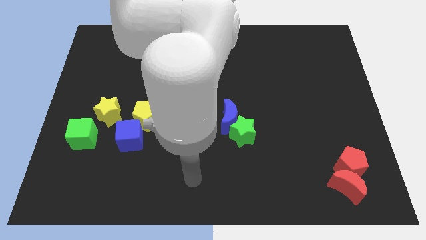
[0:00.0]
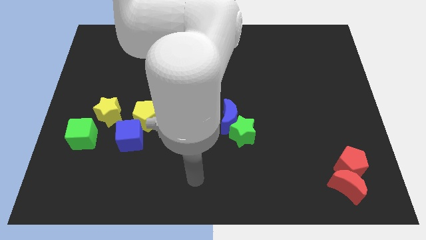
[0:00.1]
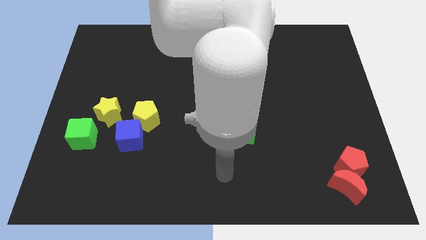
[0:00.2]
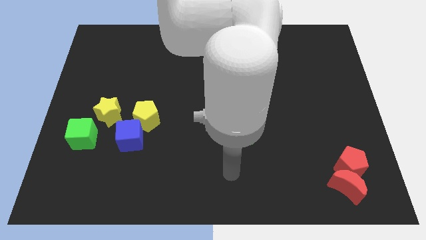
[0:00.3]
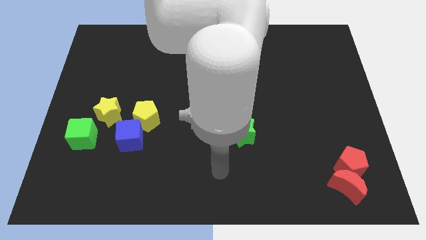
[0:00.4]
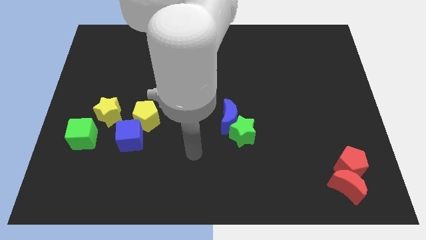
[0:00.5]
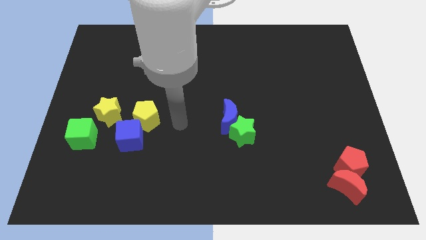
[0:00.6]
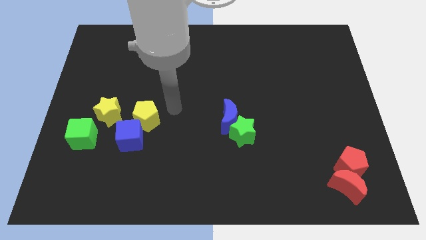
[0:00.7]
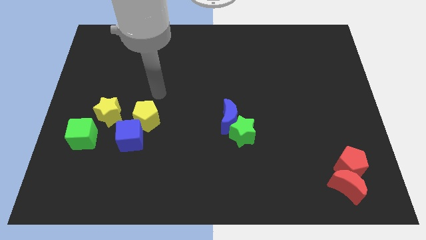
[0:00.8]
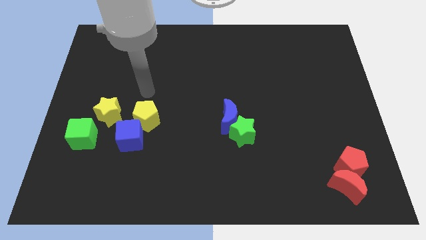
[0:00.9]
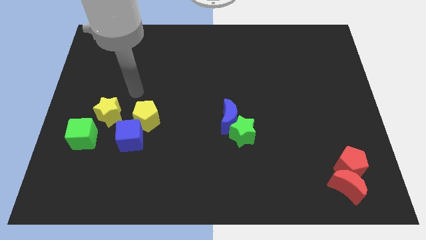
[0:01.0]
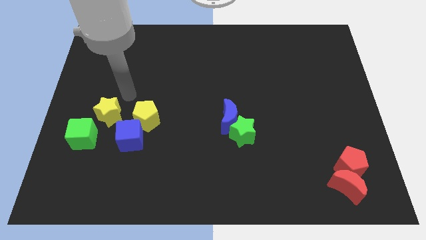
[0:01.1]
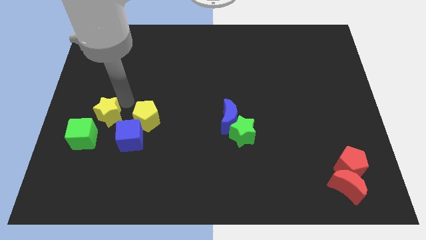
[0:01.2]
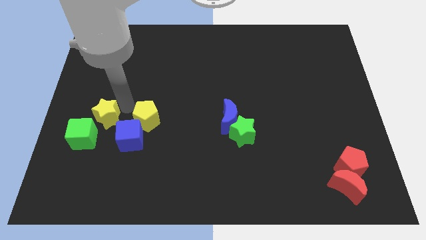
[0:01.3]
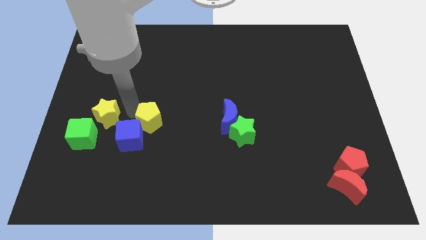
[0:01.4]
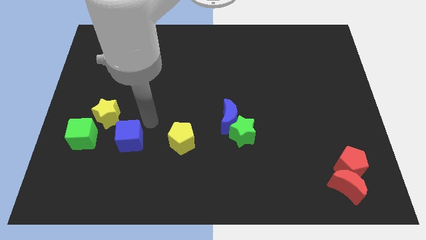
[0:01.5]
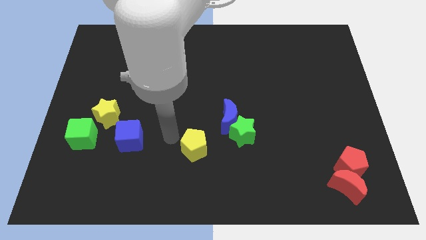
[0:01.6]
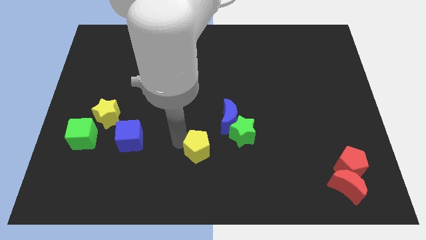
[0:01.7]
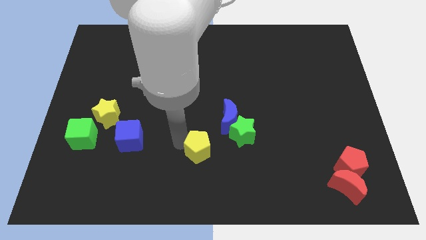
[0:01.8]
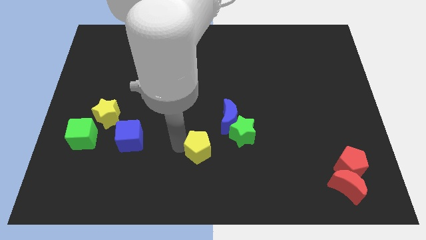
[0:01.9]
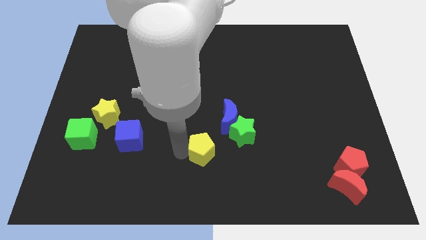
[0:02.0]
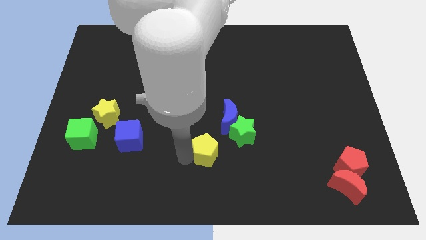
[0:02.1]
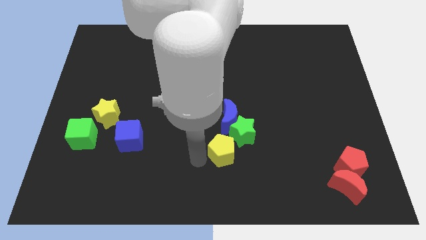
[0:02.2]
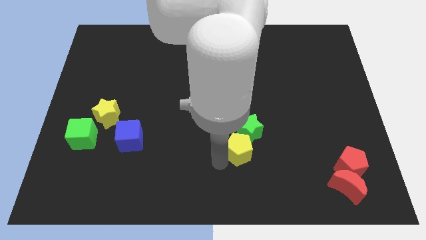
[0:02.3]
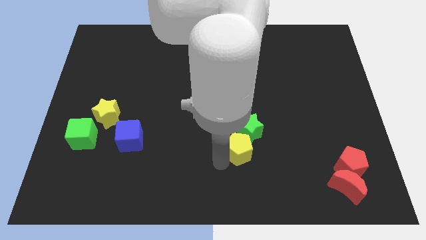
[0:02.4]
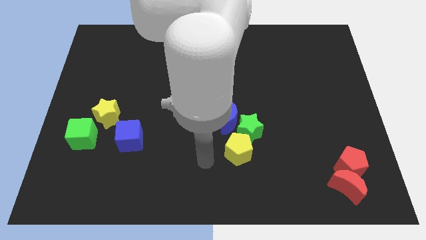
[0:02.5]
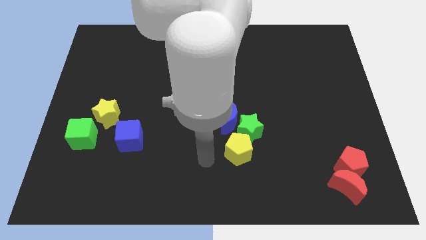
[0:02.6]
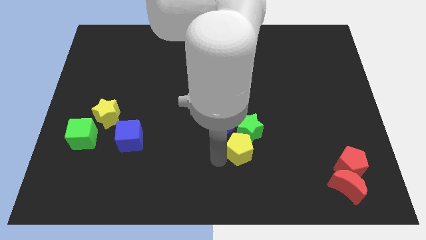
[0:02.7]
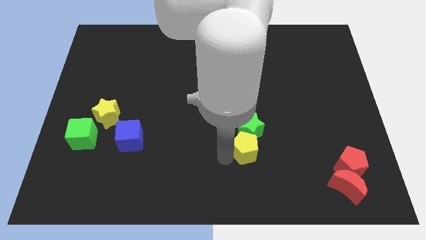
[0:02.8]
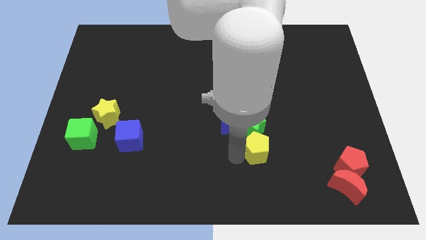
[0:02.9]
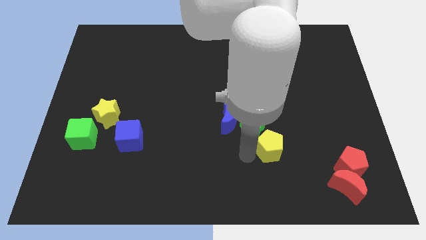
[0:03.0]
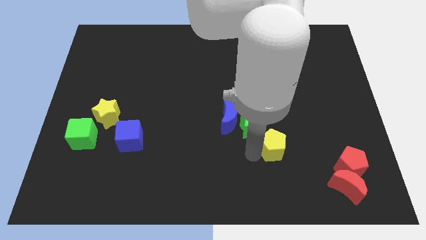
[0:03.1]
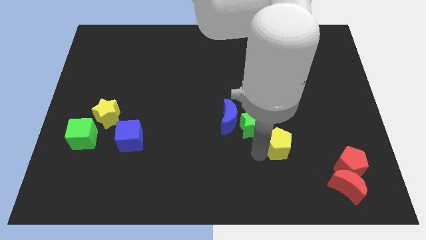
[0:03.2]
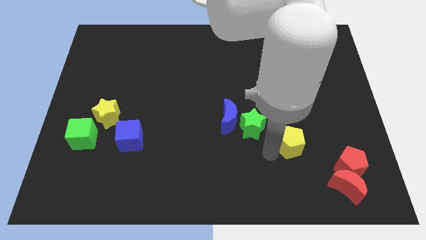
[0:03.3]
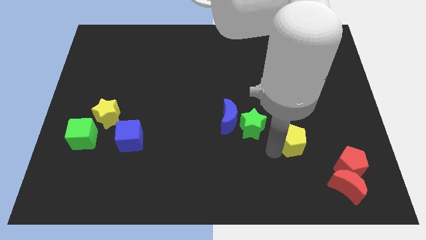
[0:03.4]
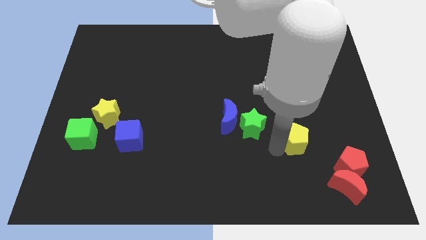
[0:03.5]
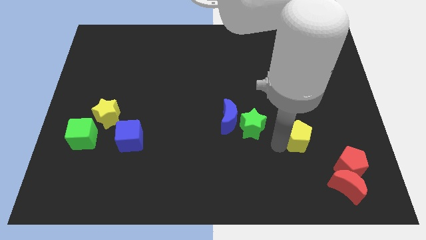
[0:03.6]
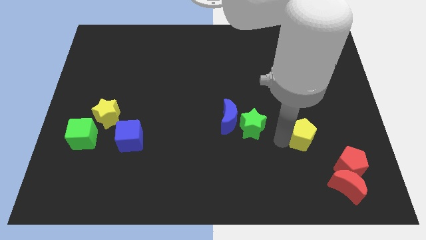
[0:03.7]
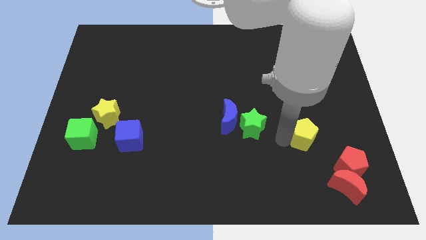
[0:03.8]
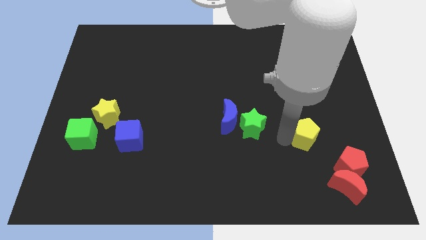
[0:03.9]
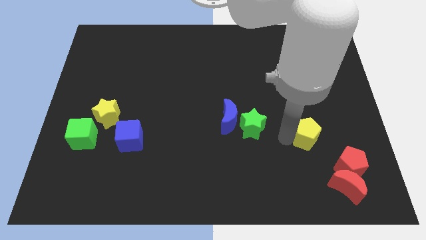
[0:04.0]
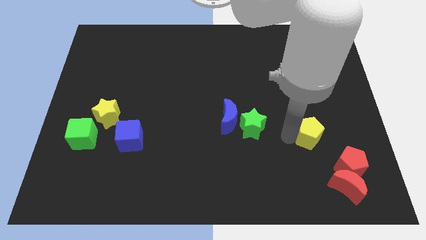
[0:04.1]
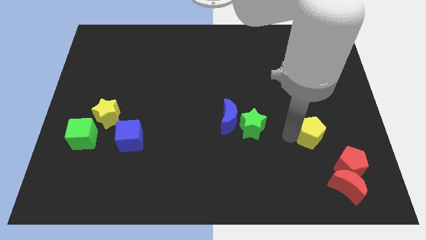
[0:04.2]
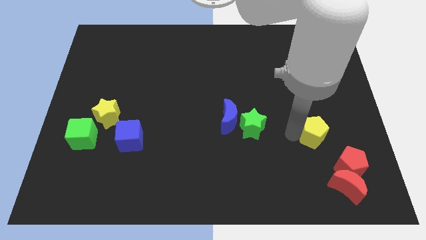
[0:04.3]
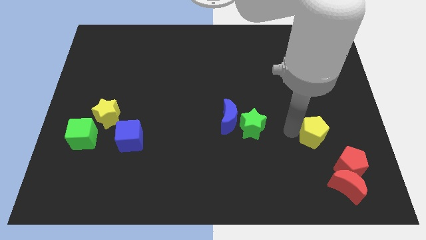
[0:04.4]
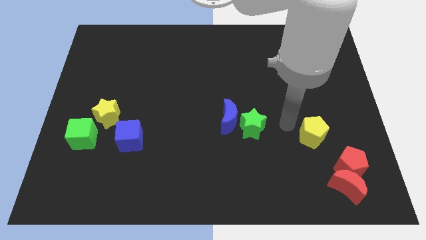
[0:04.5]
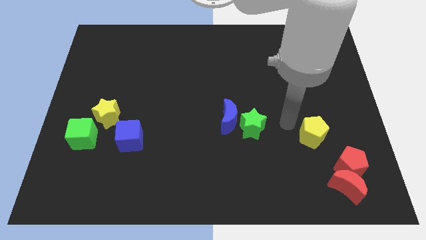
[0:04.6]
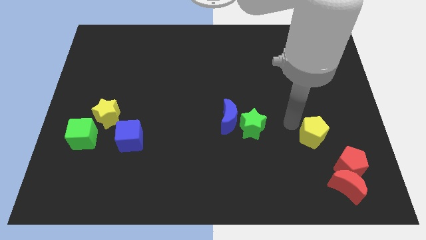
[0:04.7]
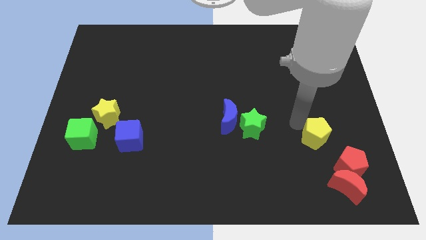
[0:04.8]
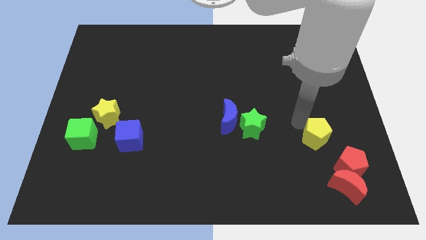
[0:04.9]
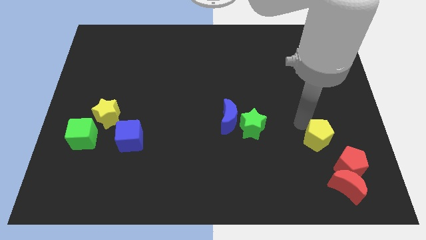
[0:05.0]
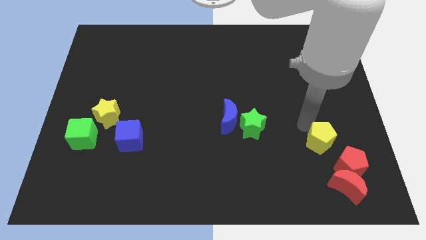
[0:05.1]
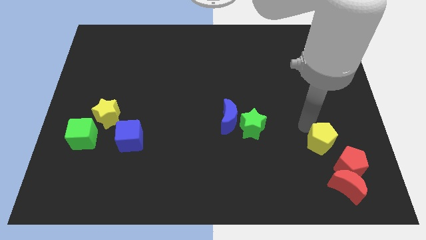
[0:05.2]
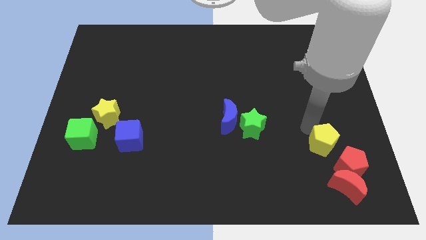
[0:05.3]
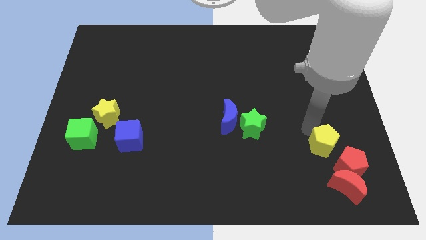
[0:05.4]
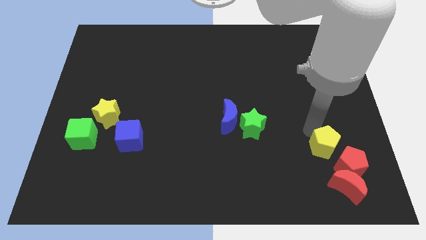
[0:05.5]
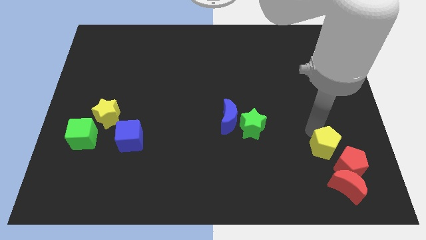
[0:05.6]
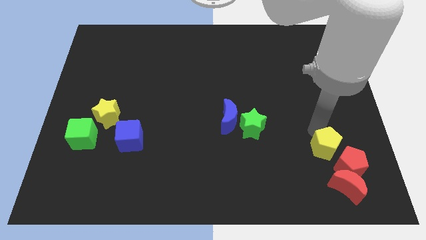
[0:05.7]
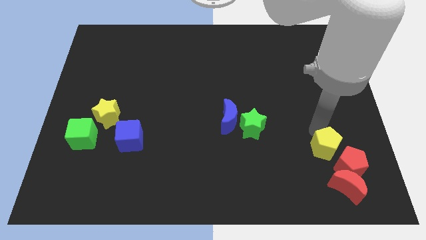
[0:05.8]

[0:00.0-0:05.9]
put the yellow pentagon next to the red pentagon

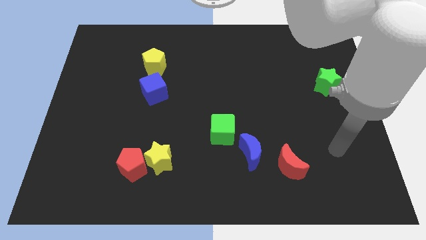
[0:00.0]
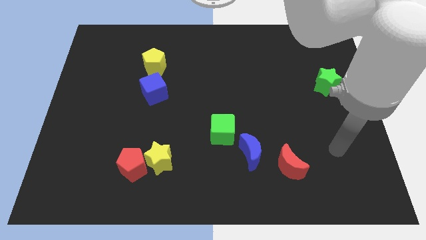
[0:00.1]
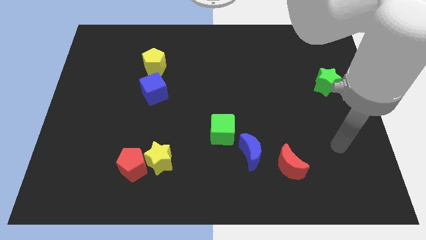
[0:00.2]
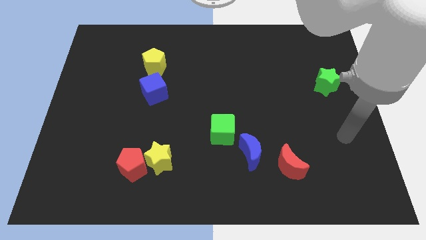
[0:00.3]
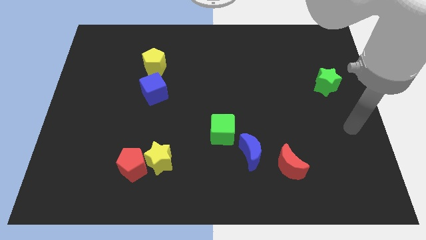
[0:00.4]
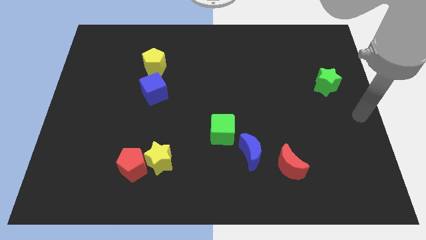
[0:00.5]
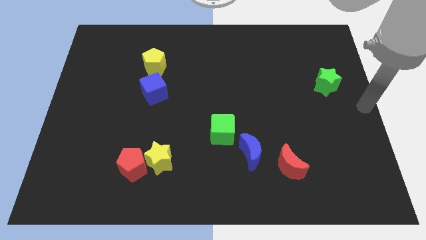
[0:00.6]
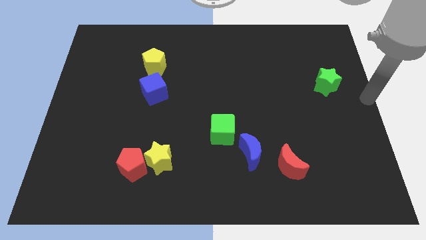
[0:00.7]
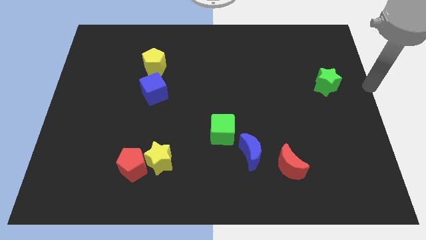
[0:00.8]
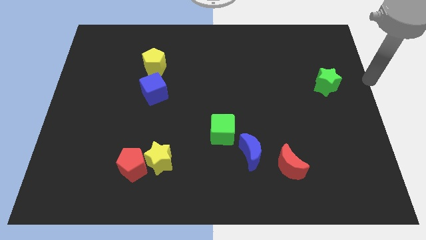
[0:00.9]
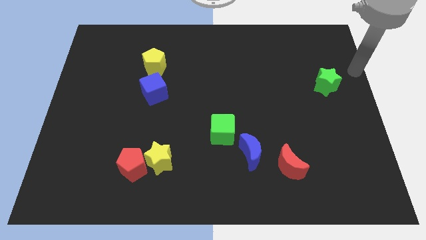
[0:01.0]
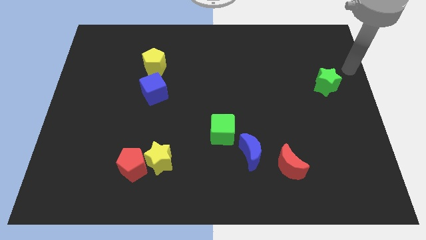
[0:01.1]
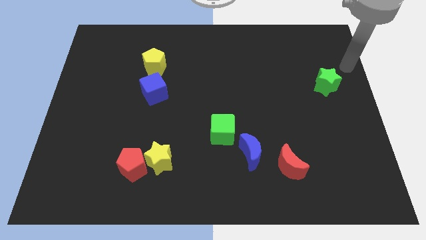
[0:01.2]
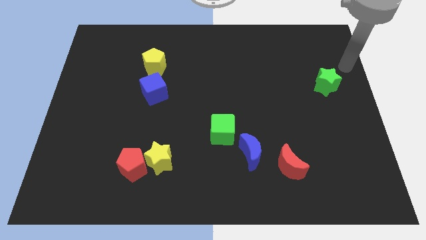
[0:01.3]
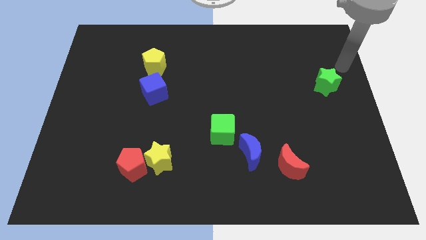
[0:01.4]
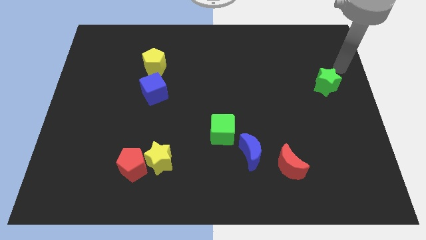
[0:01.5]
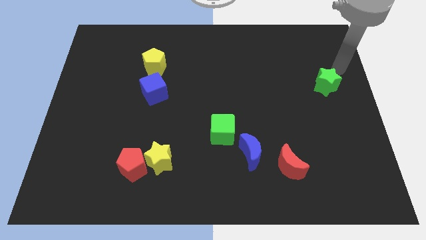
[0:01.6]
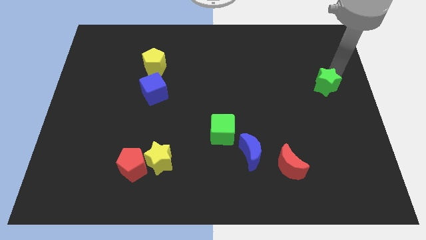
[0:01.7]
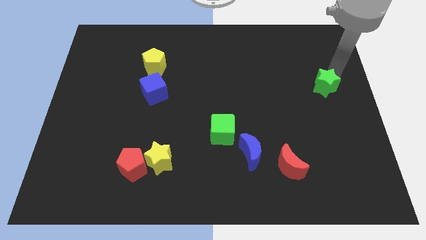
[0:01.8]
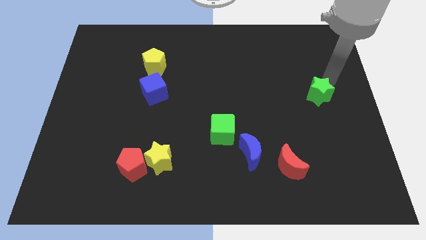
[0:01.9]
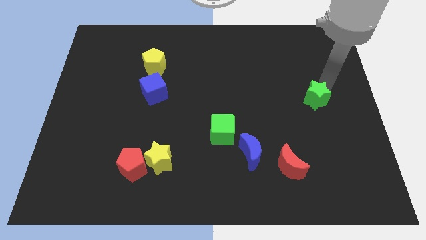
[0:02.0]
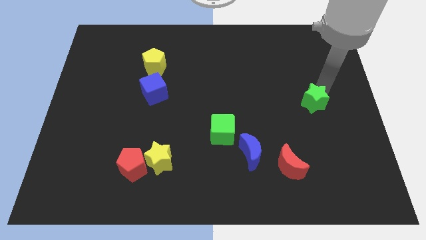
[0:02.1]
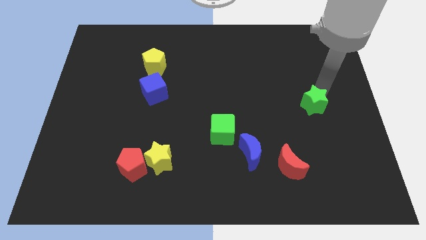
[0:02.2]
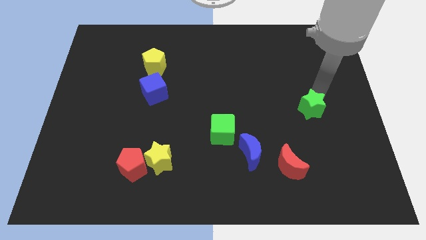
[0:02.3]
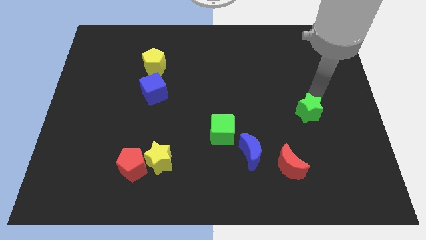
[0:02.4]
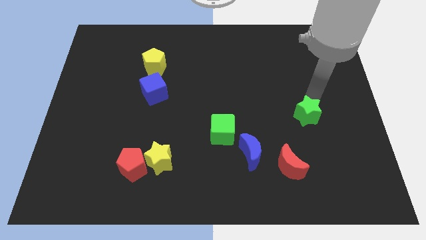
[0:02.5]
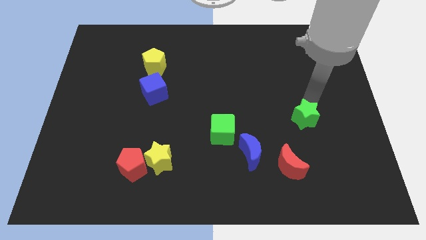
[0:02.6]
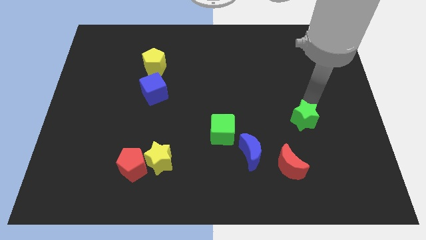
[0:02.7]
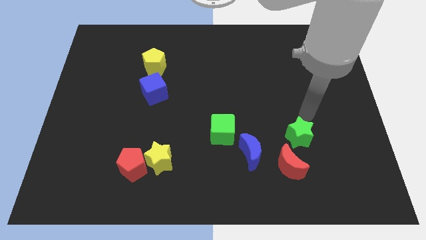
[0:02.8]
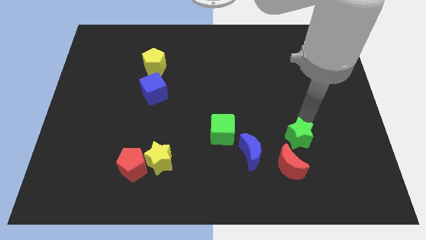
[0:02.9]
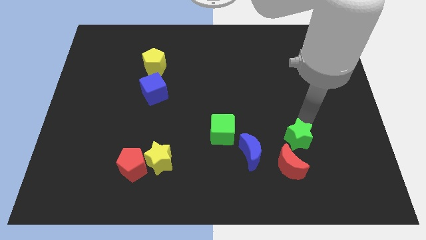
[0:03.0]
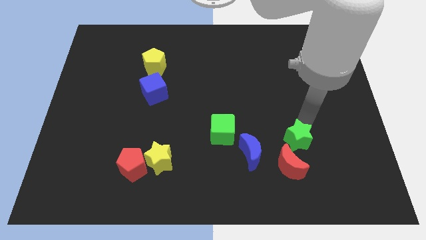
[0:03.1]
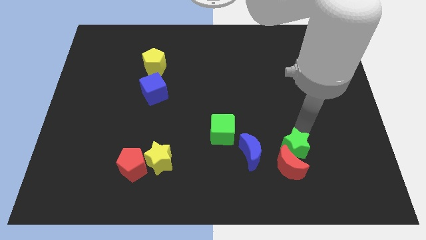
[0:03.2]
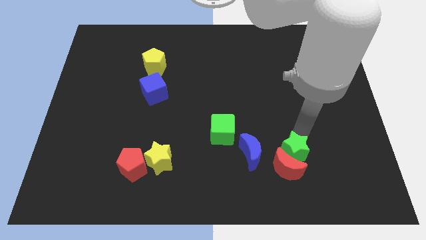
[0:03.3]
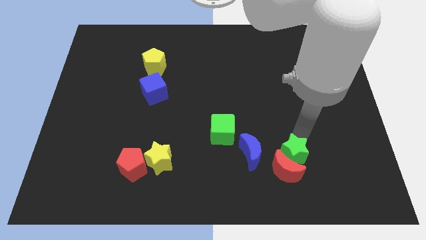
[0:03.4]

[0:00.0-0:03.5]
move the green star close to the red moon
